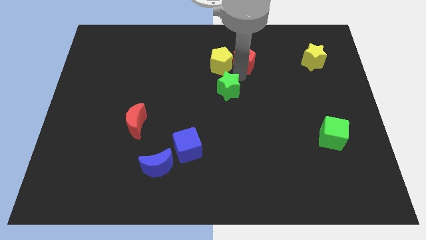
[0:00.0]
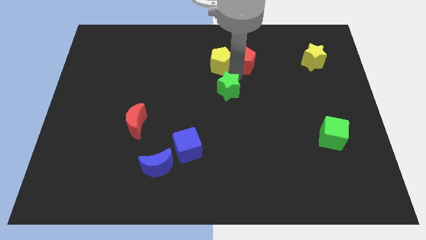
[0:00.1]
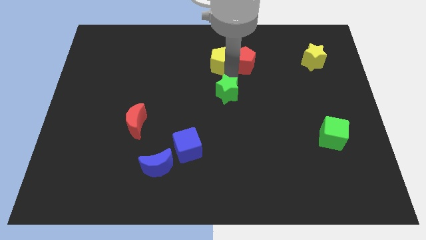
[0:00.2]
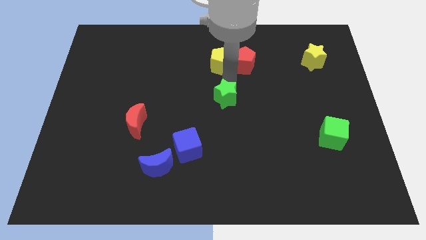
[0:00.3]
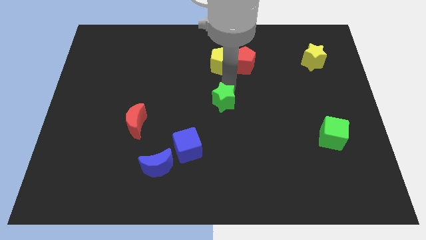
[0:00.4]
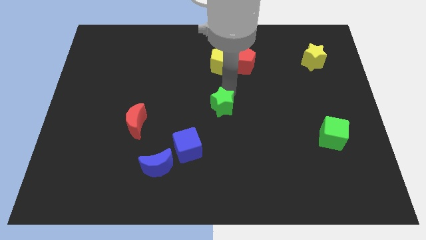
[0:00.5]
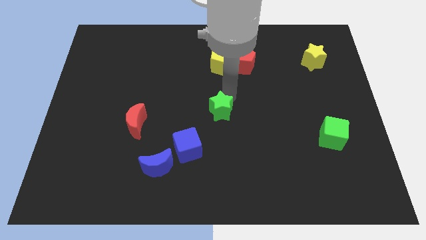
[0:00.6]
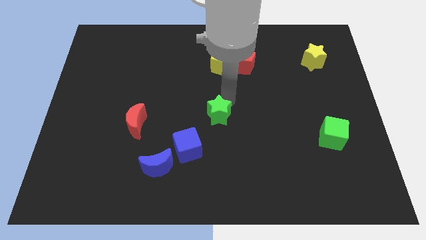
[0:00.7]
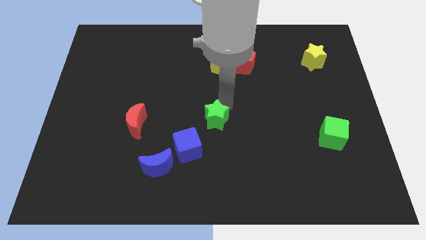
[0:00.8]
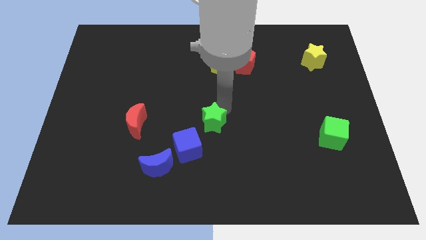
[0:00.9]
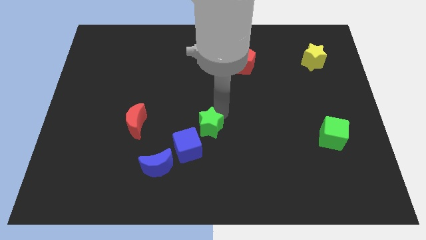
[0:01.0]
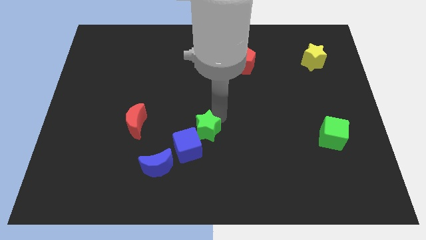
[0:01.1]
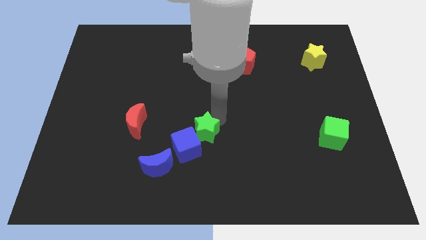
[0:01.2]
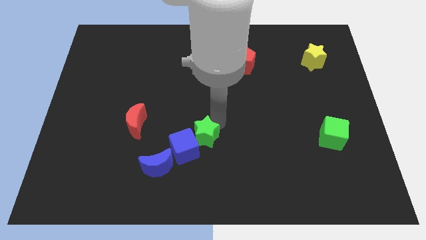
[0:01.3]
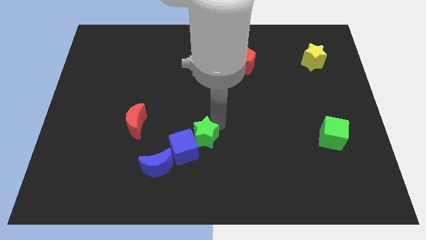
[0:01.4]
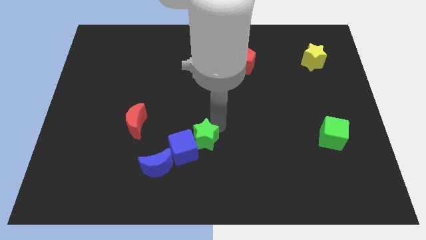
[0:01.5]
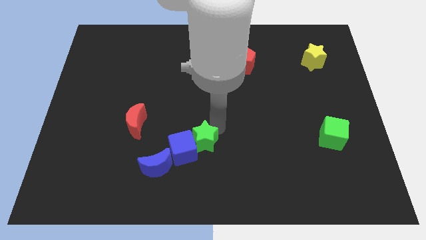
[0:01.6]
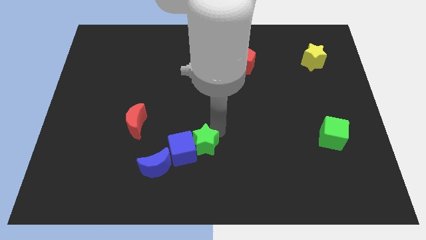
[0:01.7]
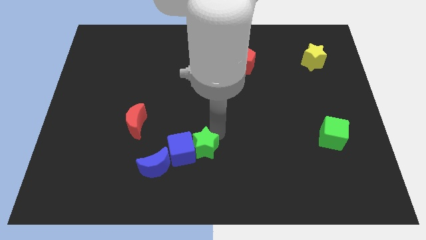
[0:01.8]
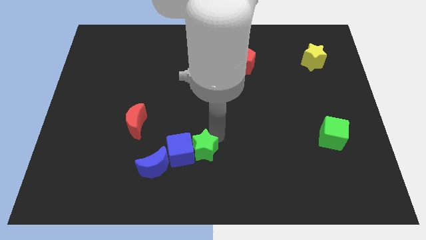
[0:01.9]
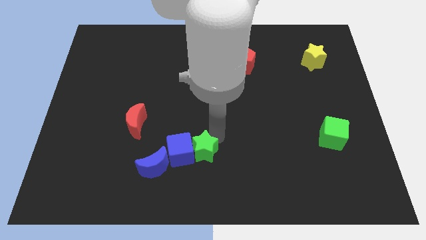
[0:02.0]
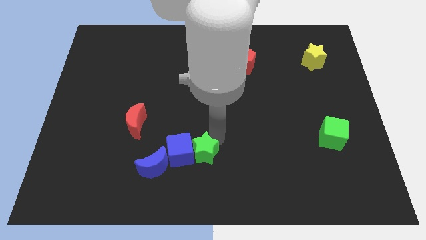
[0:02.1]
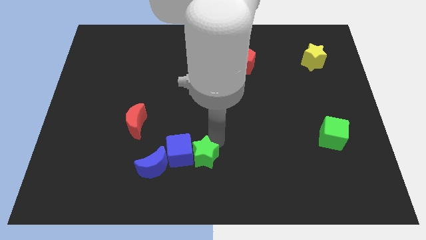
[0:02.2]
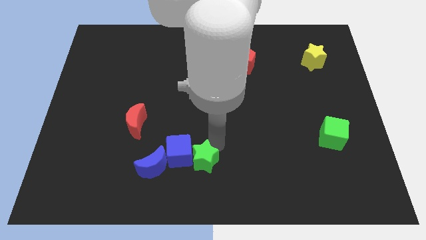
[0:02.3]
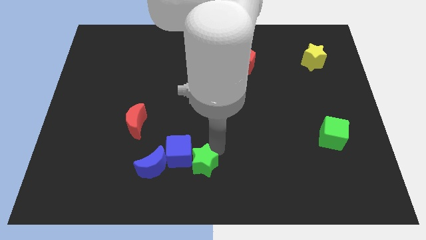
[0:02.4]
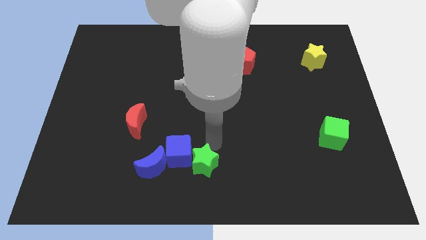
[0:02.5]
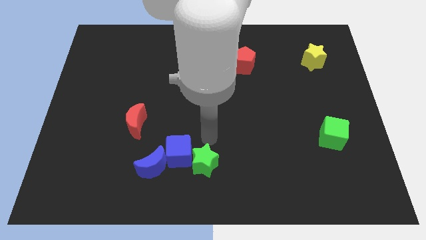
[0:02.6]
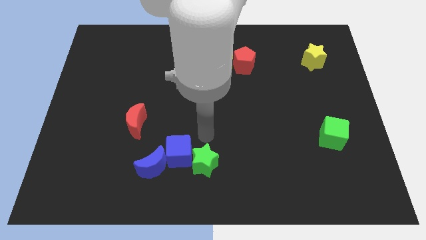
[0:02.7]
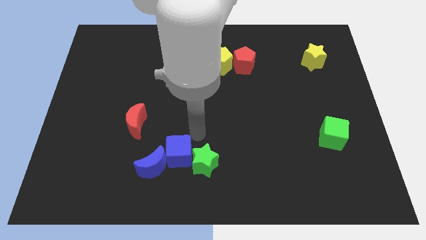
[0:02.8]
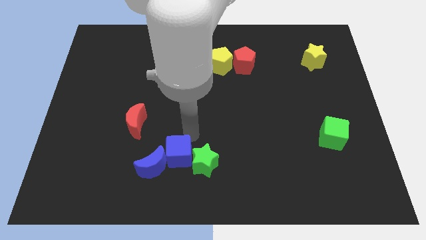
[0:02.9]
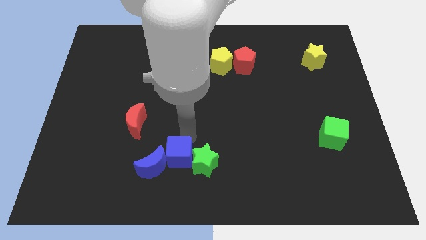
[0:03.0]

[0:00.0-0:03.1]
move the green star to the right of the blue cube

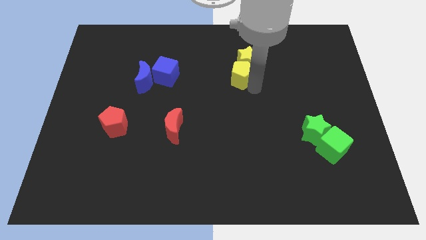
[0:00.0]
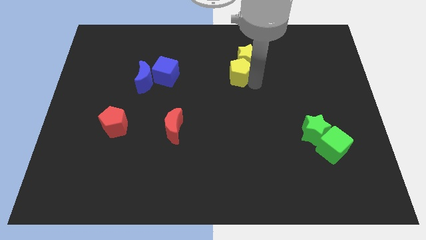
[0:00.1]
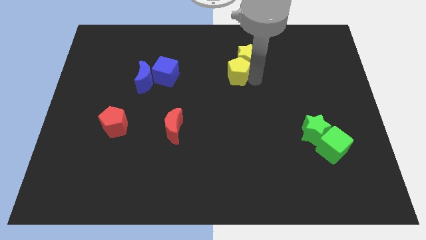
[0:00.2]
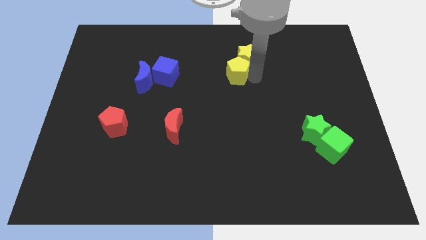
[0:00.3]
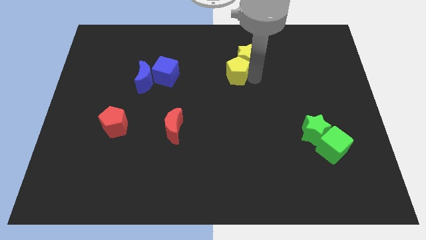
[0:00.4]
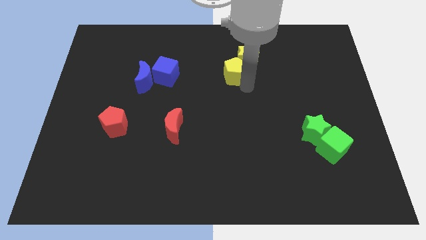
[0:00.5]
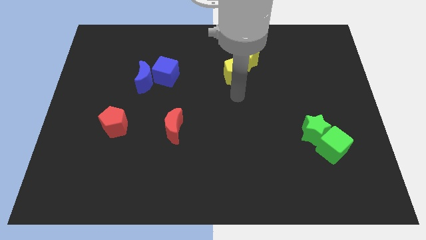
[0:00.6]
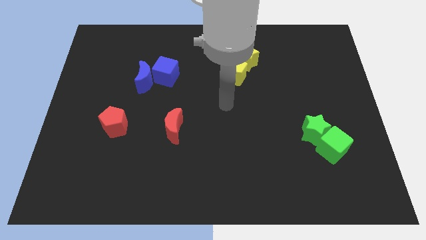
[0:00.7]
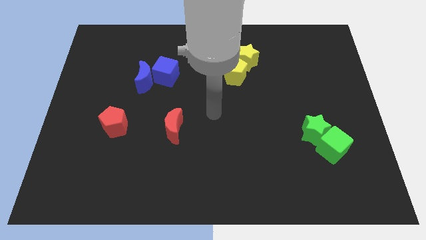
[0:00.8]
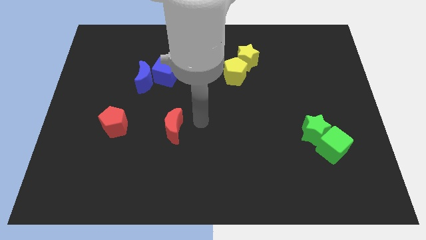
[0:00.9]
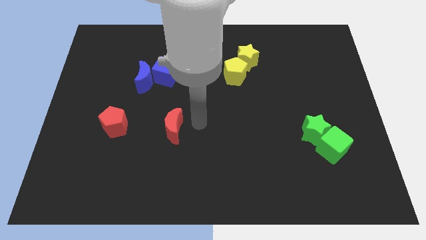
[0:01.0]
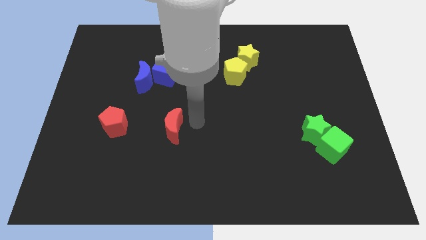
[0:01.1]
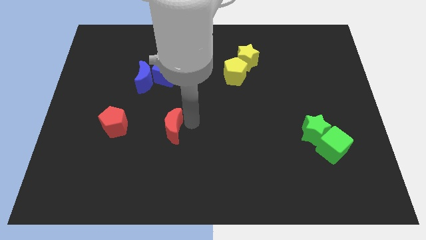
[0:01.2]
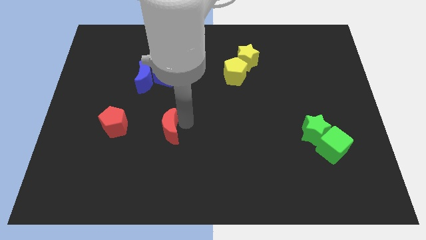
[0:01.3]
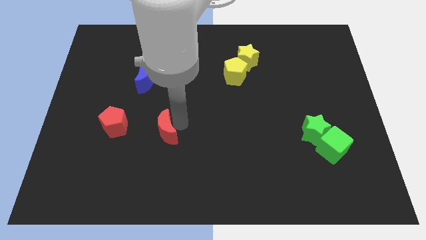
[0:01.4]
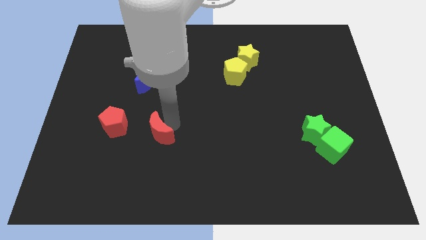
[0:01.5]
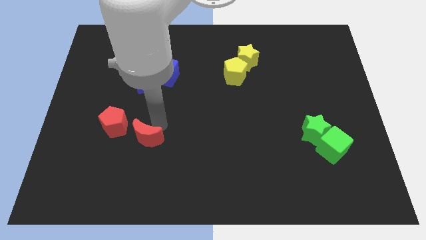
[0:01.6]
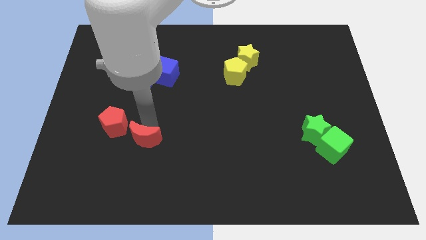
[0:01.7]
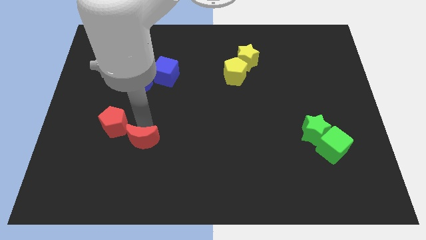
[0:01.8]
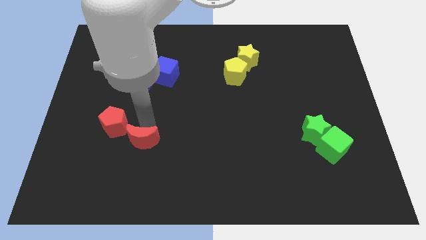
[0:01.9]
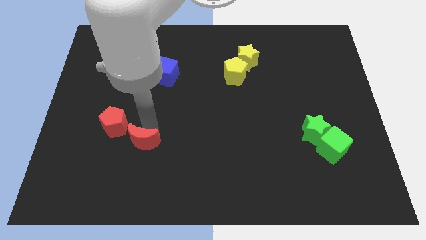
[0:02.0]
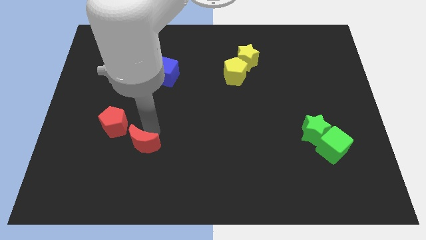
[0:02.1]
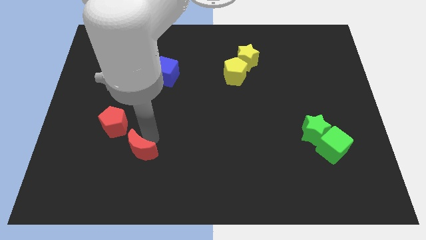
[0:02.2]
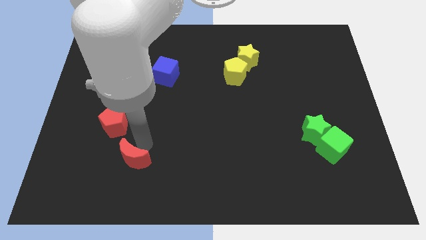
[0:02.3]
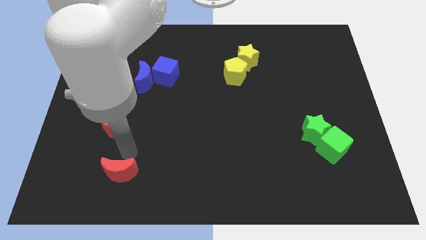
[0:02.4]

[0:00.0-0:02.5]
push the yellow pentagon and move the red moon to the bottom of red pentagon

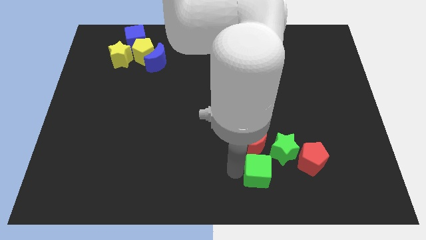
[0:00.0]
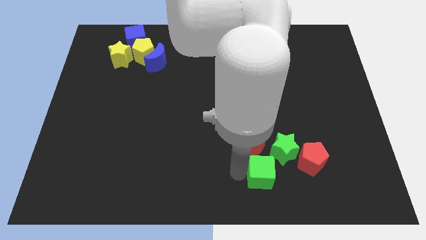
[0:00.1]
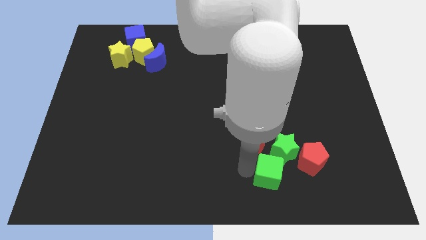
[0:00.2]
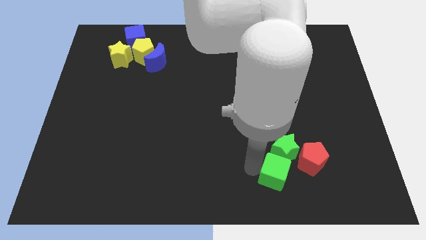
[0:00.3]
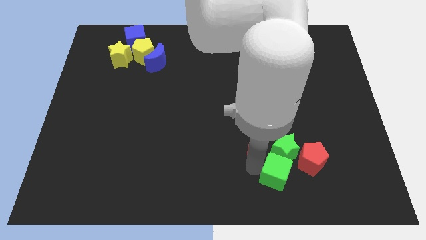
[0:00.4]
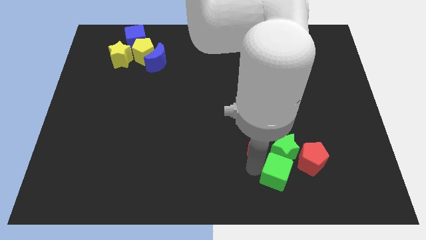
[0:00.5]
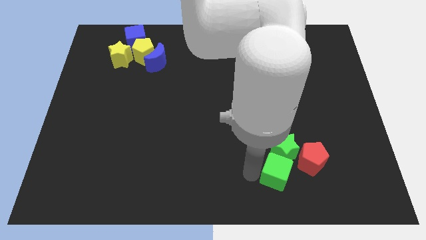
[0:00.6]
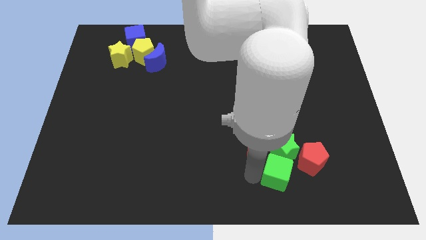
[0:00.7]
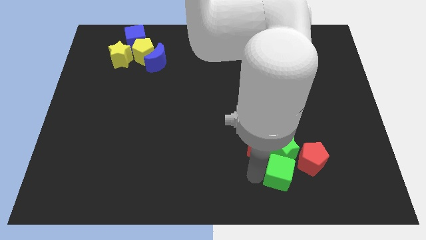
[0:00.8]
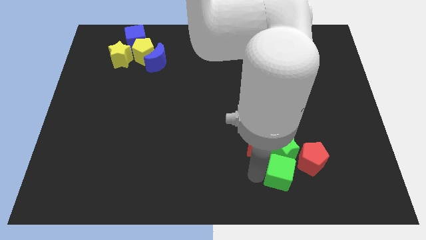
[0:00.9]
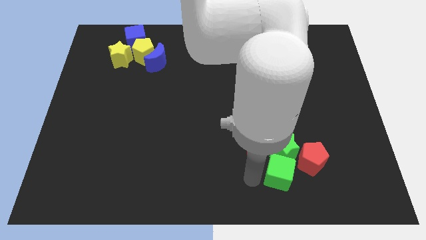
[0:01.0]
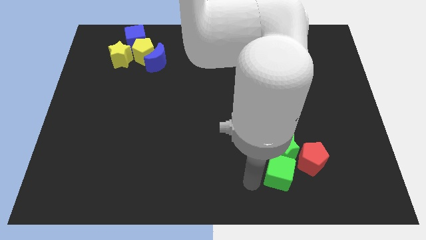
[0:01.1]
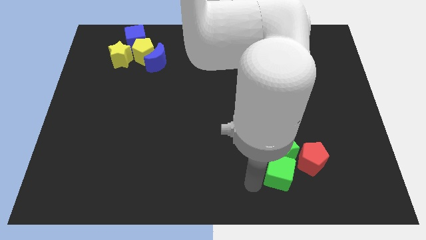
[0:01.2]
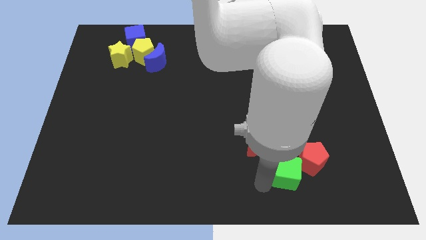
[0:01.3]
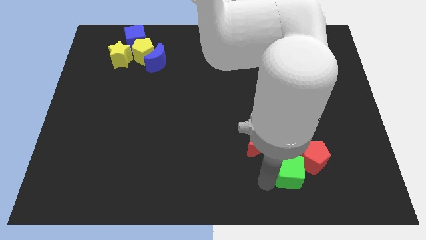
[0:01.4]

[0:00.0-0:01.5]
place the green cube down to the green star

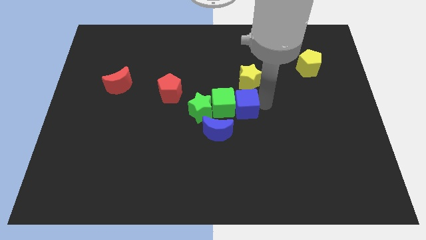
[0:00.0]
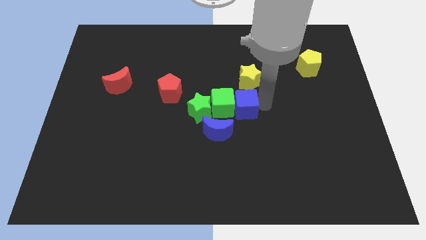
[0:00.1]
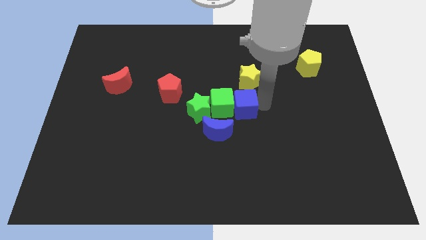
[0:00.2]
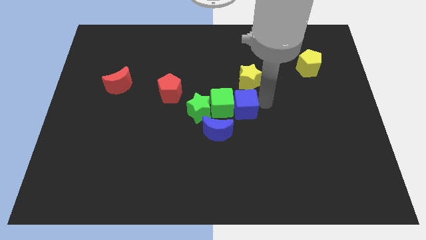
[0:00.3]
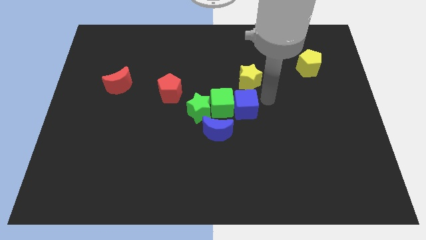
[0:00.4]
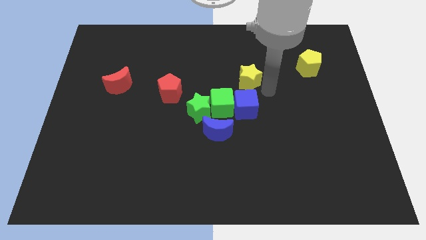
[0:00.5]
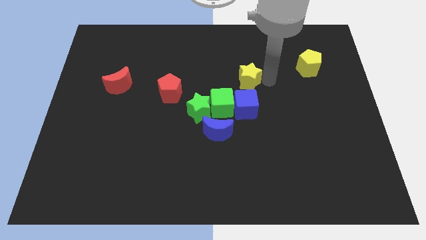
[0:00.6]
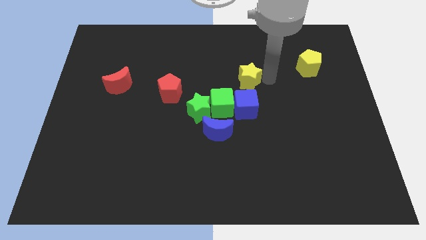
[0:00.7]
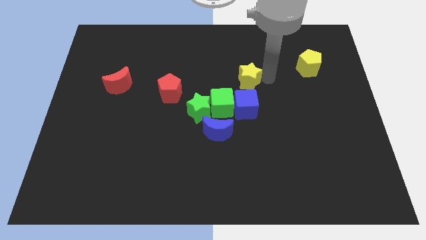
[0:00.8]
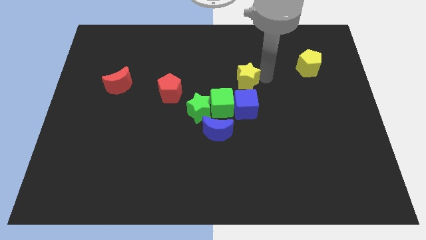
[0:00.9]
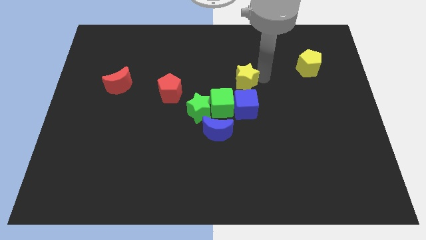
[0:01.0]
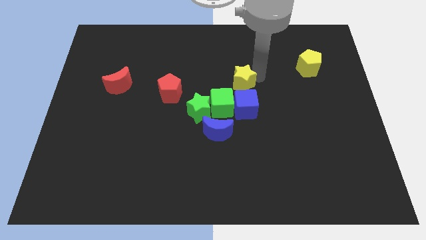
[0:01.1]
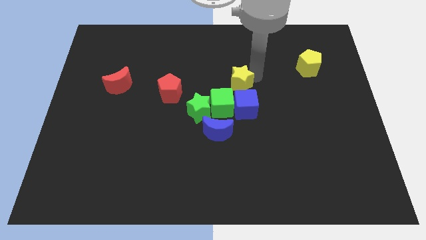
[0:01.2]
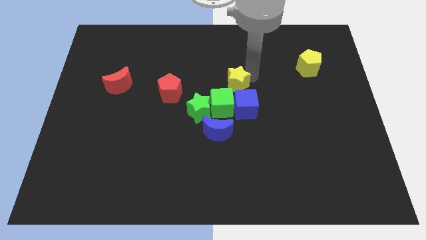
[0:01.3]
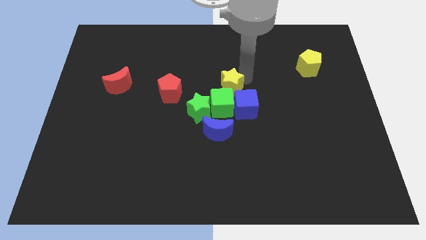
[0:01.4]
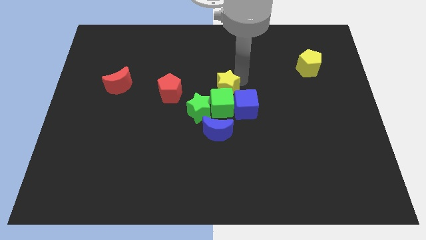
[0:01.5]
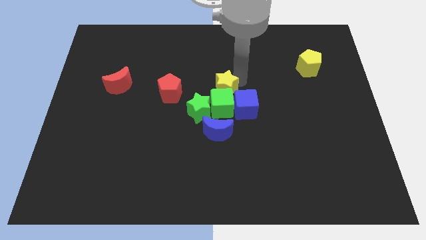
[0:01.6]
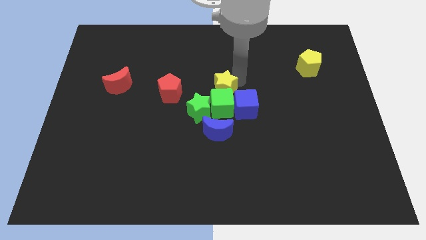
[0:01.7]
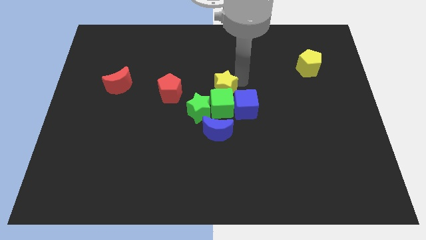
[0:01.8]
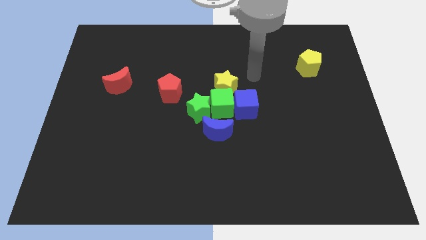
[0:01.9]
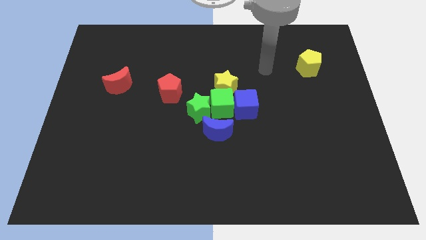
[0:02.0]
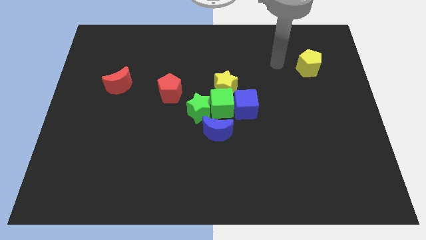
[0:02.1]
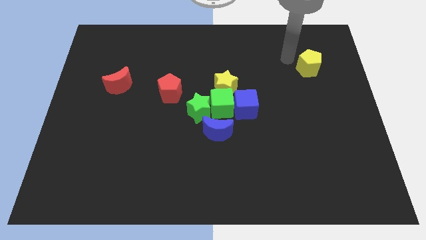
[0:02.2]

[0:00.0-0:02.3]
push the green star to the top of the green cube
